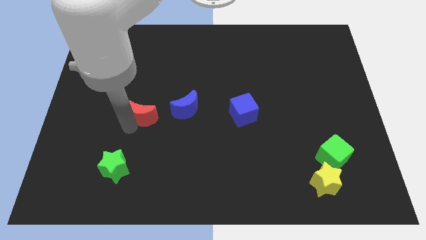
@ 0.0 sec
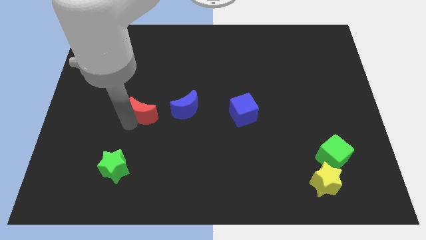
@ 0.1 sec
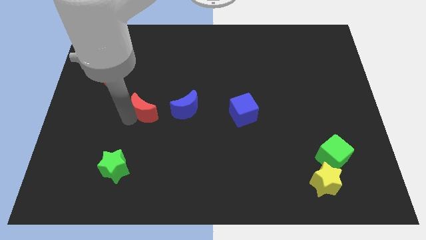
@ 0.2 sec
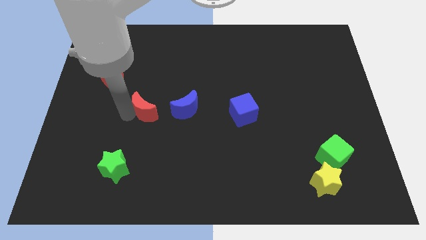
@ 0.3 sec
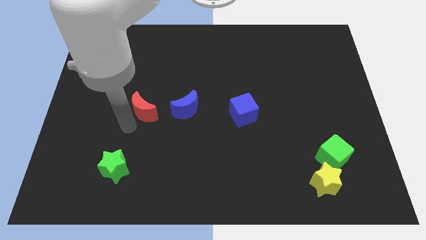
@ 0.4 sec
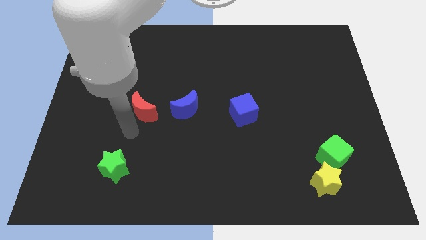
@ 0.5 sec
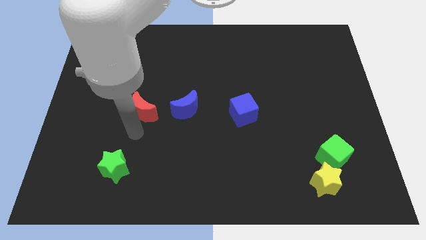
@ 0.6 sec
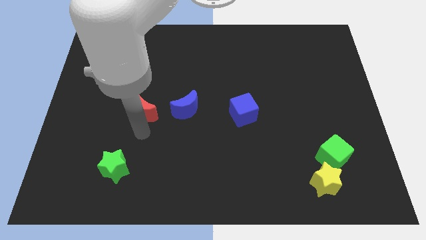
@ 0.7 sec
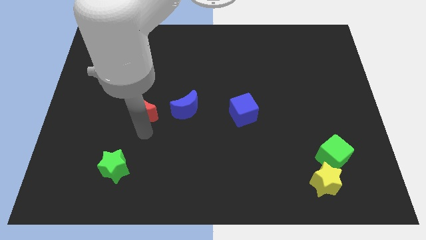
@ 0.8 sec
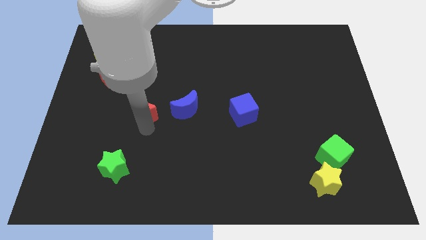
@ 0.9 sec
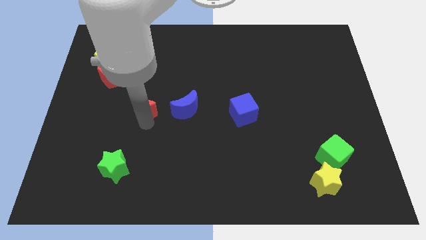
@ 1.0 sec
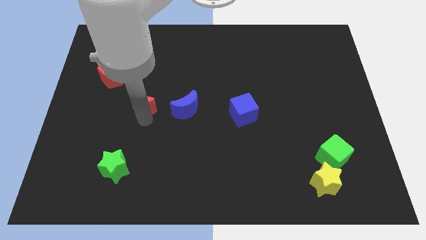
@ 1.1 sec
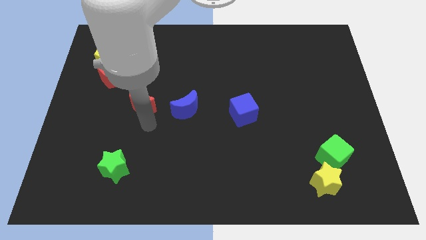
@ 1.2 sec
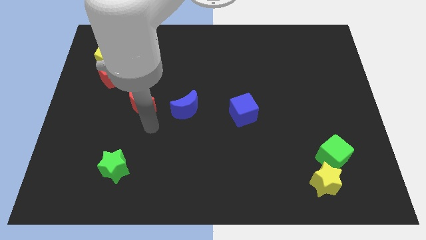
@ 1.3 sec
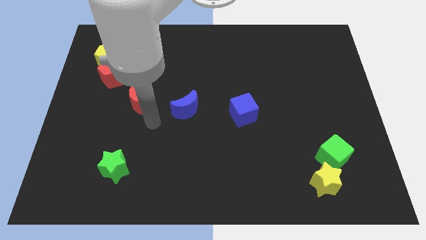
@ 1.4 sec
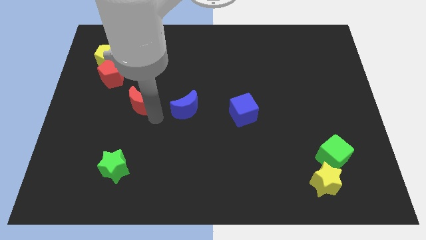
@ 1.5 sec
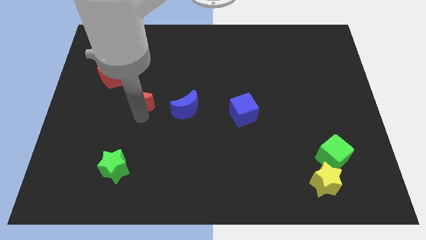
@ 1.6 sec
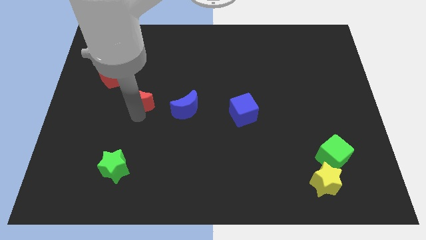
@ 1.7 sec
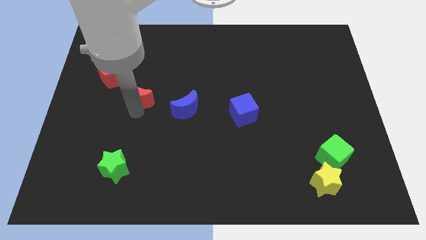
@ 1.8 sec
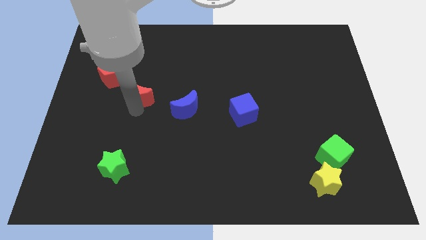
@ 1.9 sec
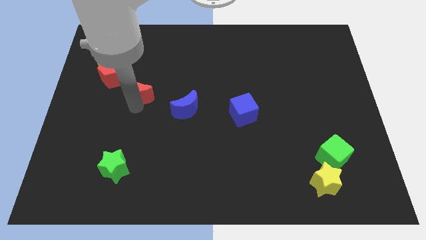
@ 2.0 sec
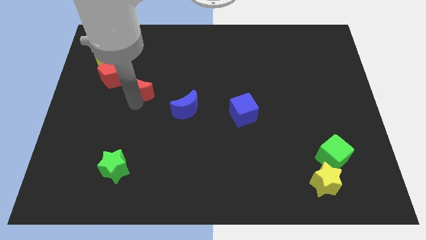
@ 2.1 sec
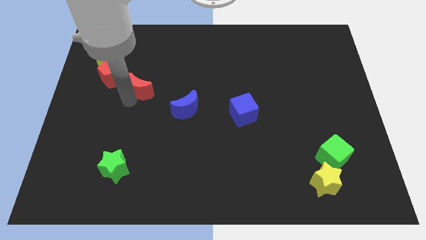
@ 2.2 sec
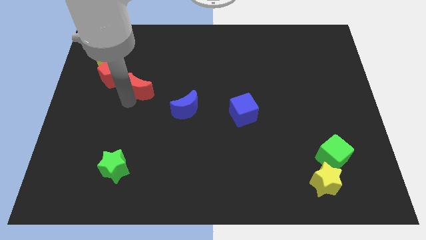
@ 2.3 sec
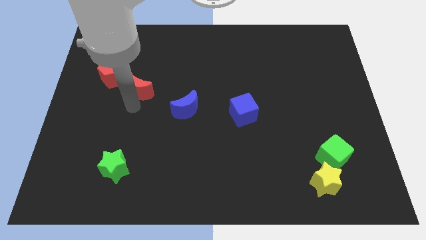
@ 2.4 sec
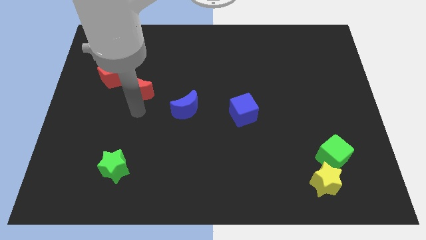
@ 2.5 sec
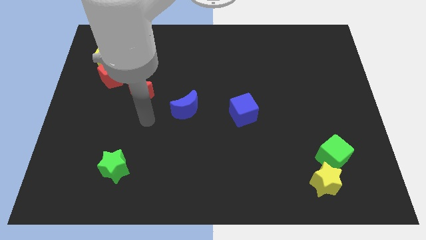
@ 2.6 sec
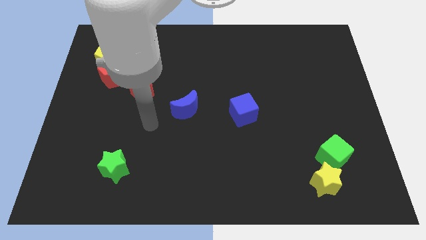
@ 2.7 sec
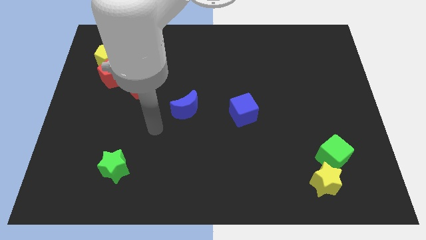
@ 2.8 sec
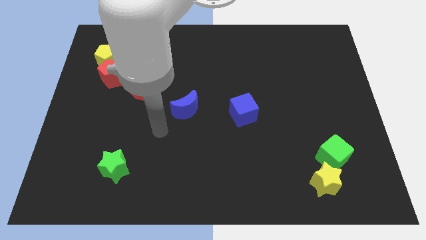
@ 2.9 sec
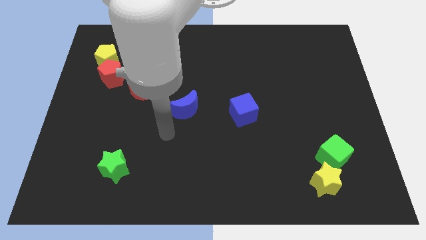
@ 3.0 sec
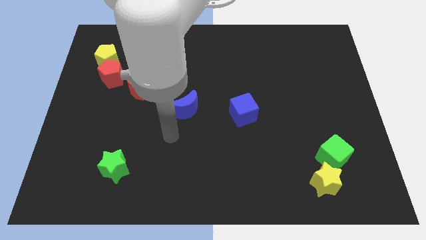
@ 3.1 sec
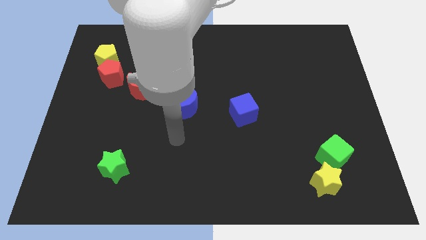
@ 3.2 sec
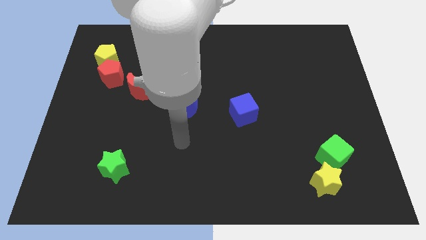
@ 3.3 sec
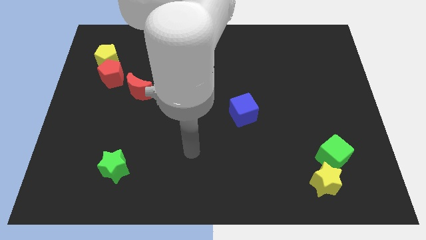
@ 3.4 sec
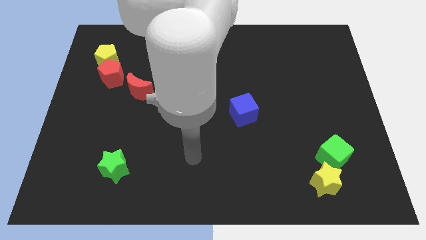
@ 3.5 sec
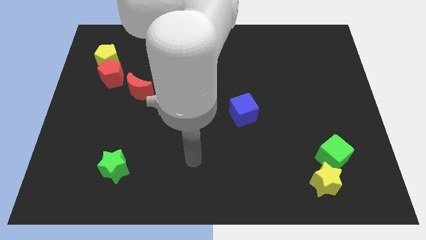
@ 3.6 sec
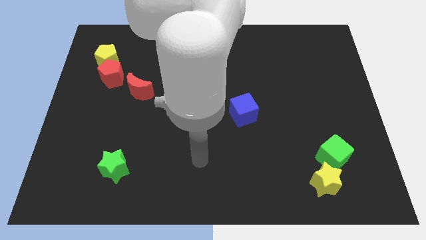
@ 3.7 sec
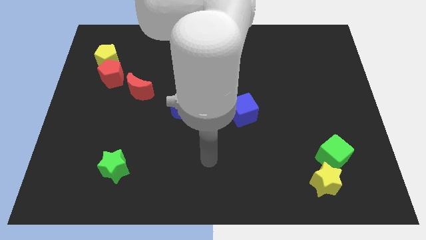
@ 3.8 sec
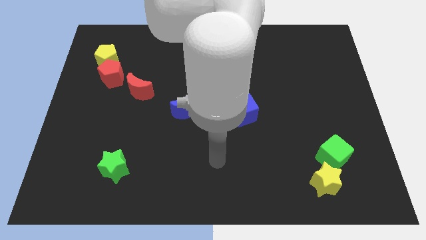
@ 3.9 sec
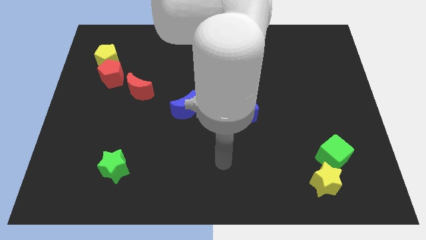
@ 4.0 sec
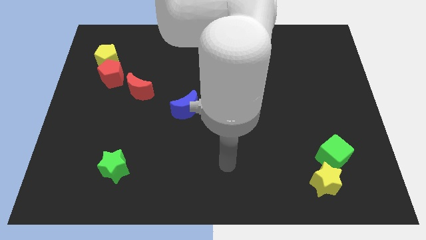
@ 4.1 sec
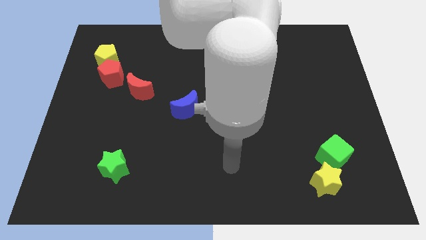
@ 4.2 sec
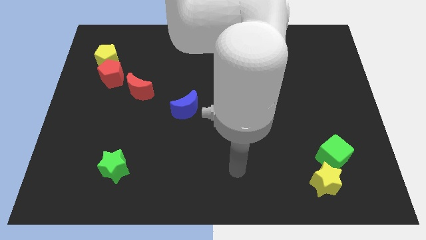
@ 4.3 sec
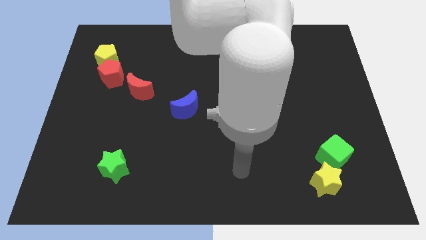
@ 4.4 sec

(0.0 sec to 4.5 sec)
put the red moon between the red pentagon and blue moon

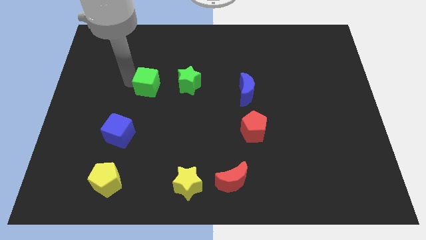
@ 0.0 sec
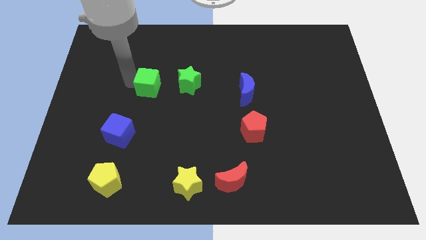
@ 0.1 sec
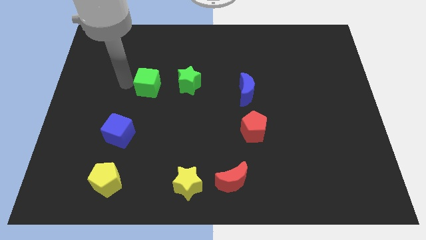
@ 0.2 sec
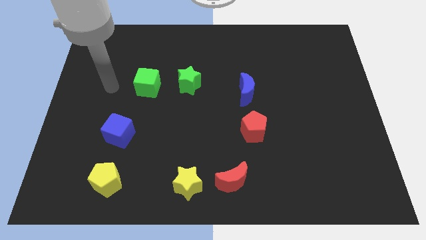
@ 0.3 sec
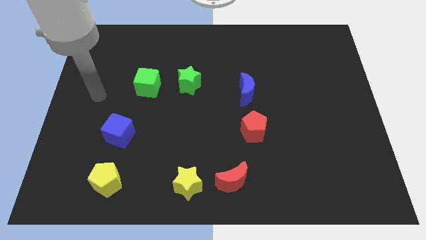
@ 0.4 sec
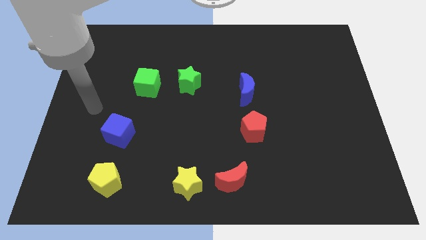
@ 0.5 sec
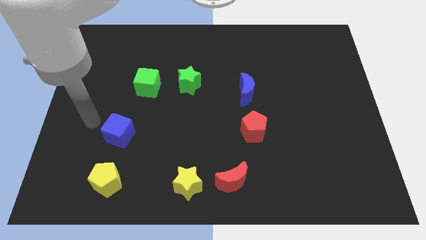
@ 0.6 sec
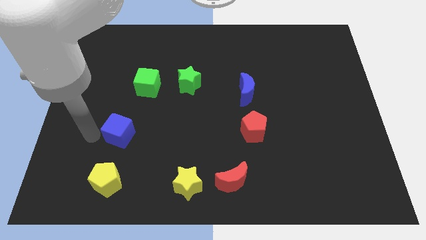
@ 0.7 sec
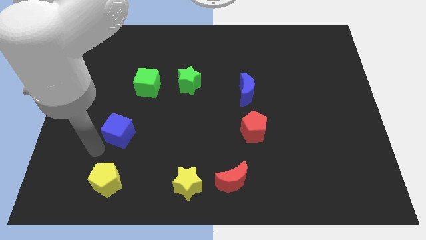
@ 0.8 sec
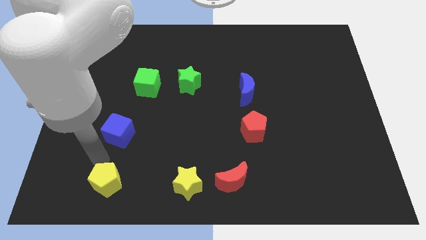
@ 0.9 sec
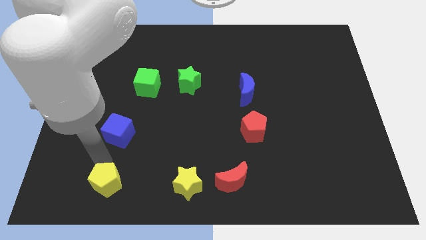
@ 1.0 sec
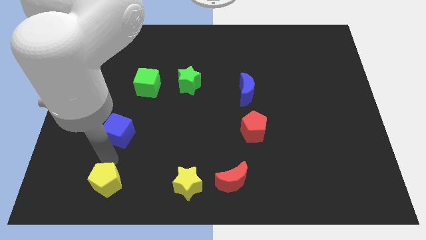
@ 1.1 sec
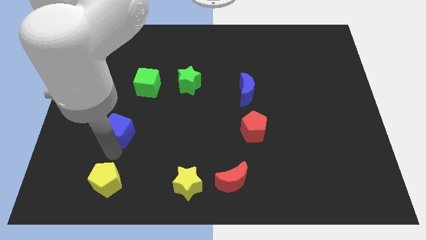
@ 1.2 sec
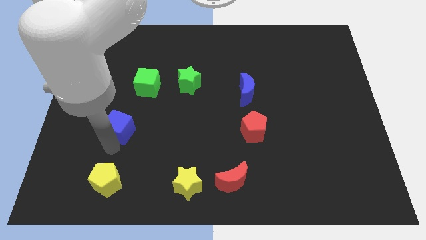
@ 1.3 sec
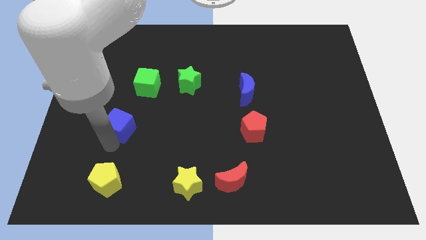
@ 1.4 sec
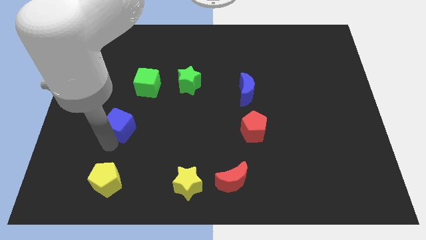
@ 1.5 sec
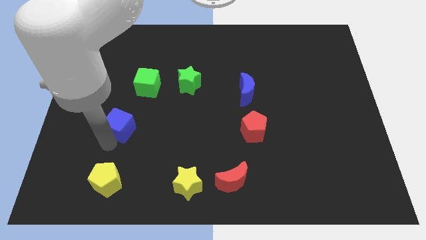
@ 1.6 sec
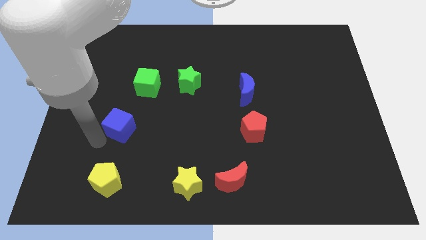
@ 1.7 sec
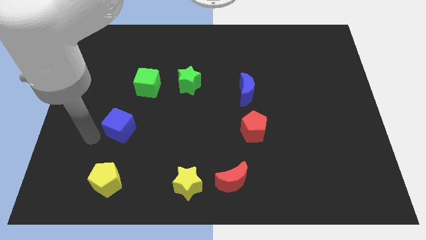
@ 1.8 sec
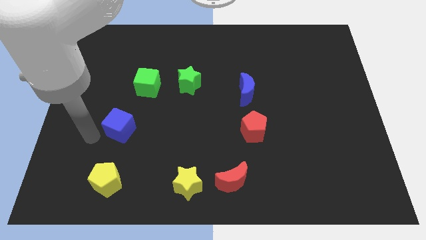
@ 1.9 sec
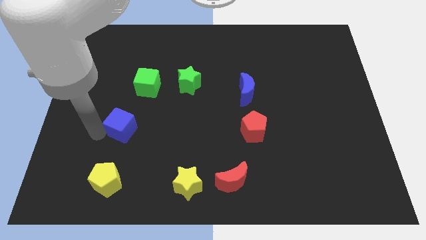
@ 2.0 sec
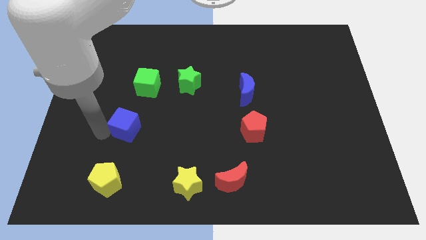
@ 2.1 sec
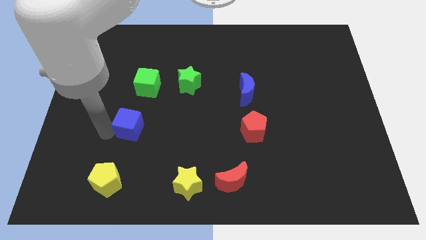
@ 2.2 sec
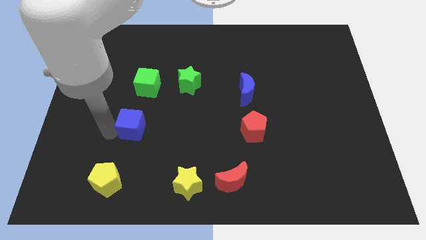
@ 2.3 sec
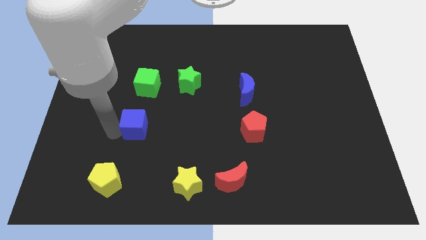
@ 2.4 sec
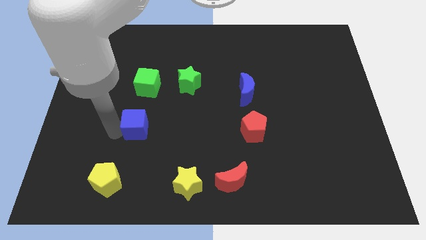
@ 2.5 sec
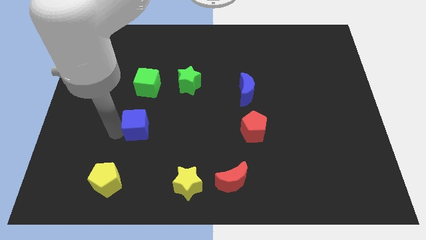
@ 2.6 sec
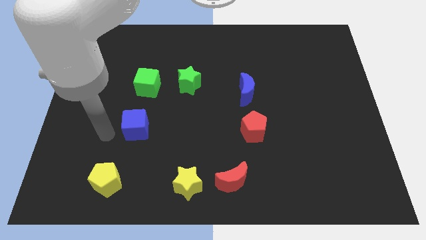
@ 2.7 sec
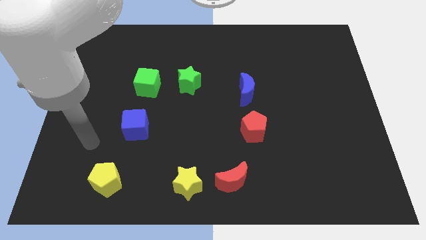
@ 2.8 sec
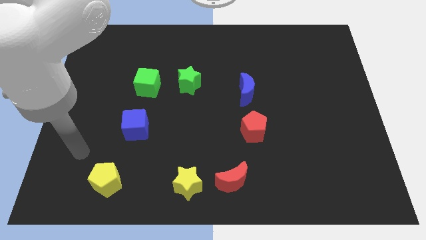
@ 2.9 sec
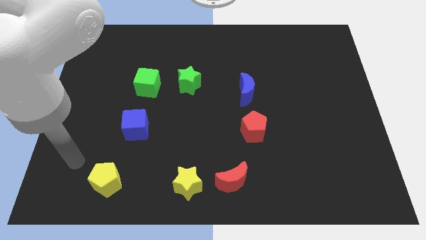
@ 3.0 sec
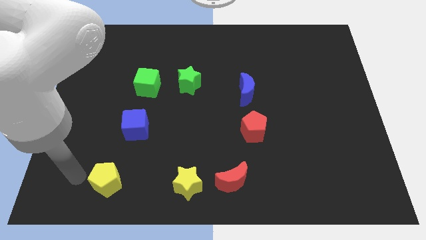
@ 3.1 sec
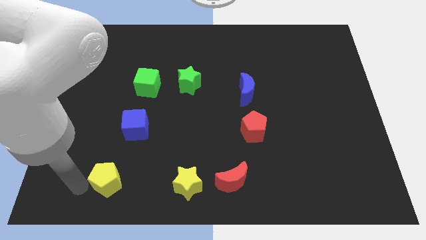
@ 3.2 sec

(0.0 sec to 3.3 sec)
place blue cube to the bottom of green cube

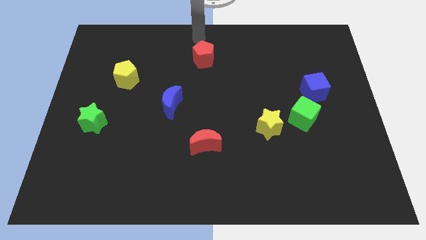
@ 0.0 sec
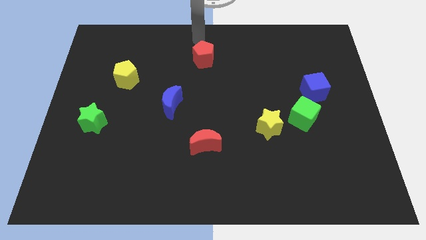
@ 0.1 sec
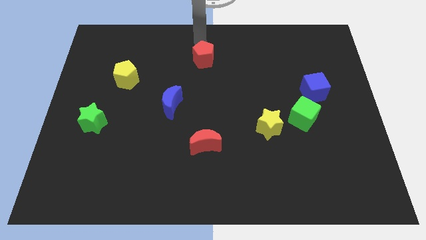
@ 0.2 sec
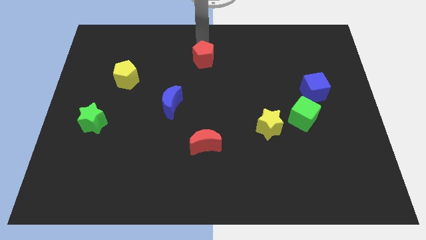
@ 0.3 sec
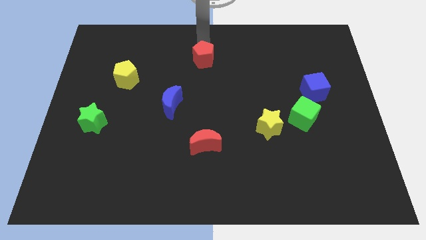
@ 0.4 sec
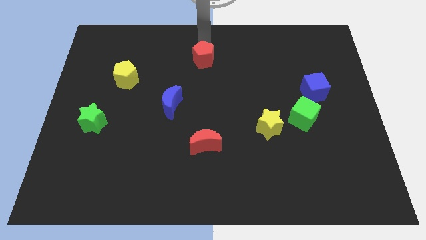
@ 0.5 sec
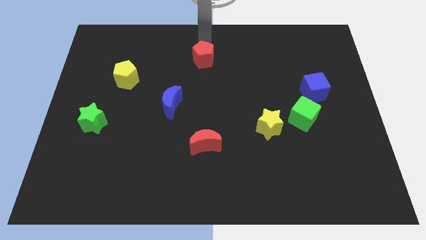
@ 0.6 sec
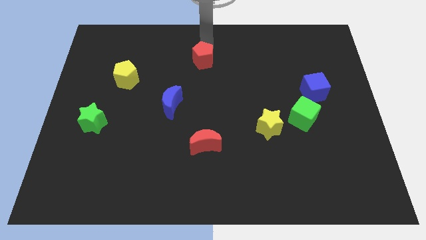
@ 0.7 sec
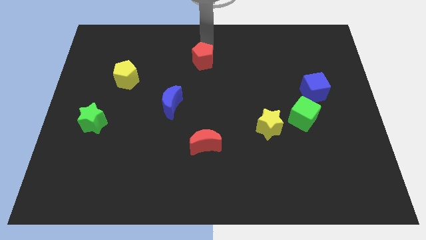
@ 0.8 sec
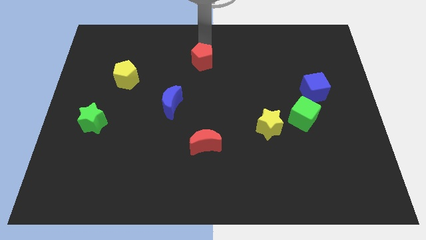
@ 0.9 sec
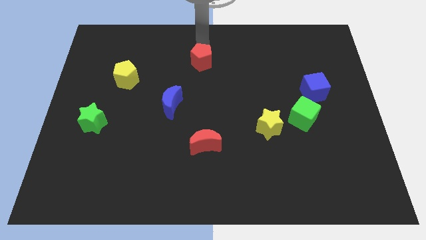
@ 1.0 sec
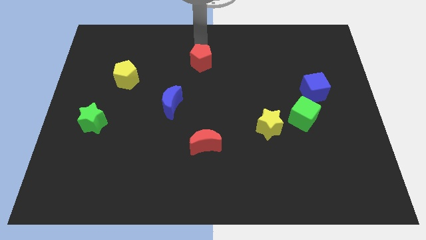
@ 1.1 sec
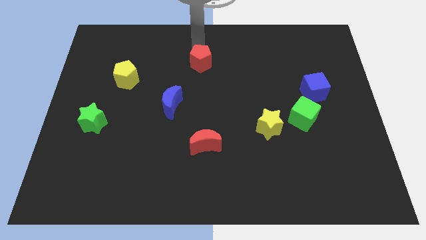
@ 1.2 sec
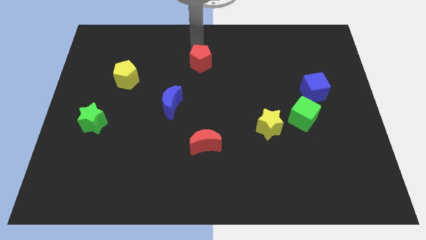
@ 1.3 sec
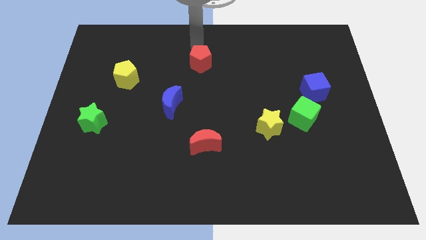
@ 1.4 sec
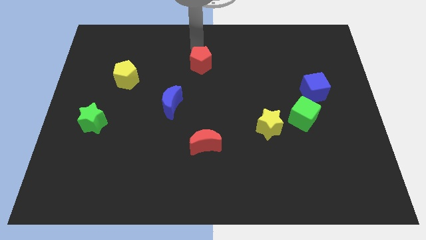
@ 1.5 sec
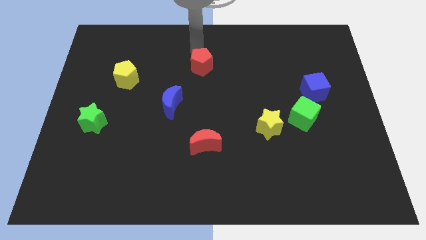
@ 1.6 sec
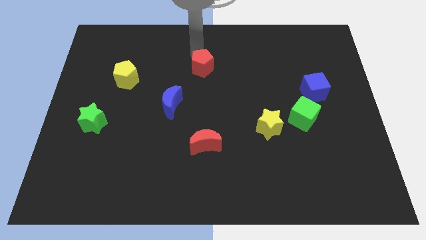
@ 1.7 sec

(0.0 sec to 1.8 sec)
push the red pentagon towards the red crescent
